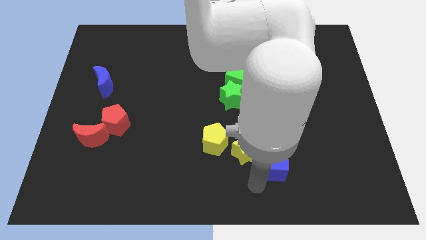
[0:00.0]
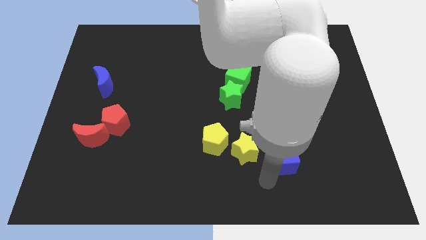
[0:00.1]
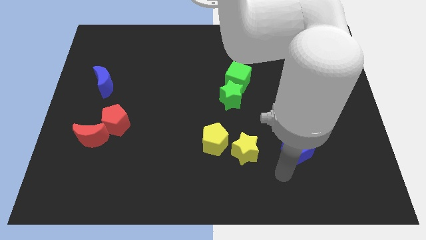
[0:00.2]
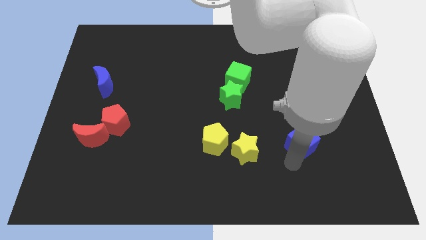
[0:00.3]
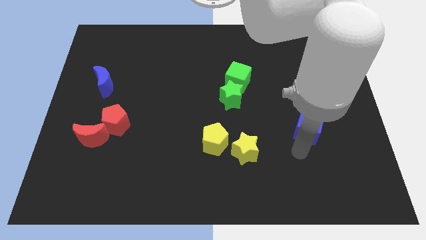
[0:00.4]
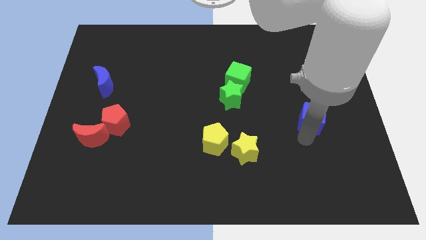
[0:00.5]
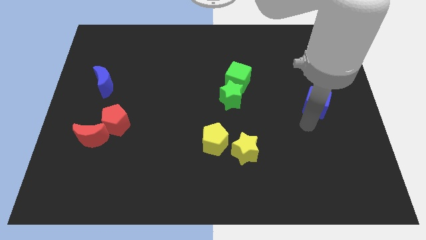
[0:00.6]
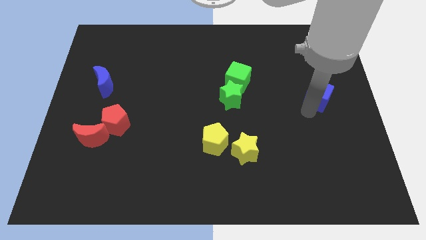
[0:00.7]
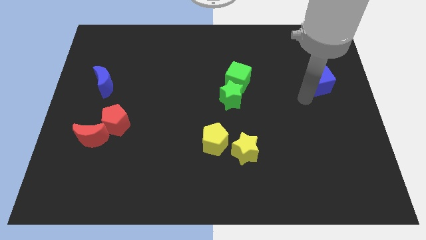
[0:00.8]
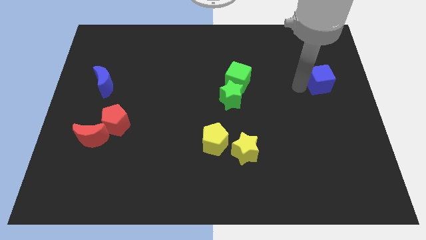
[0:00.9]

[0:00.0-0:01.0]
separate the blue cube from the yellow star

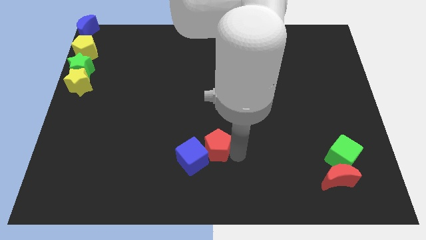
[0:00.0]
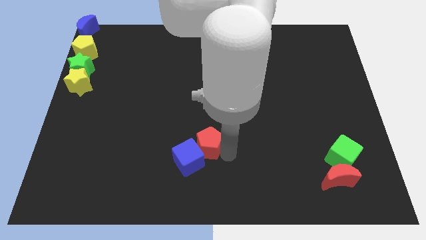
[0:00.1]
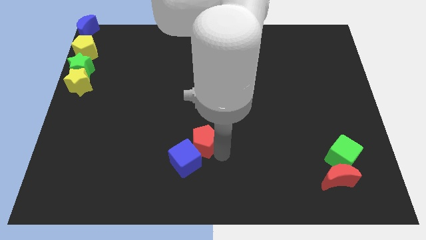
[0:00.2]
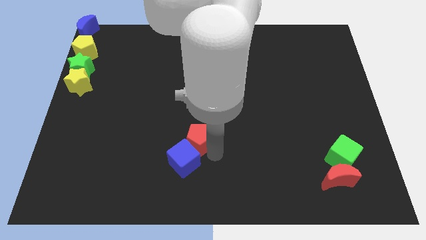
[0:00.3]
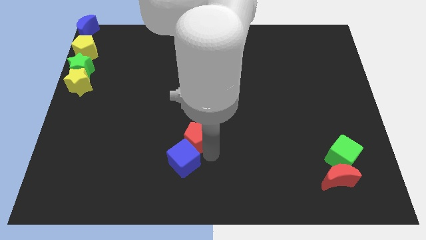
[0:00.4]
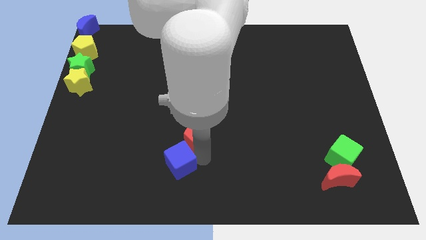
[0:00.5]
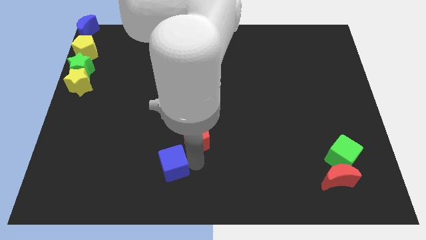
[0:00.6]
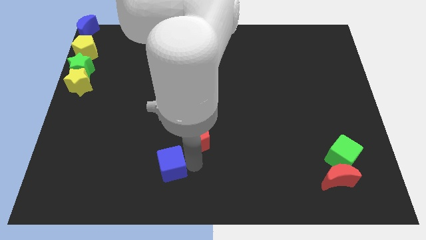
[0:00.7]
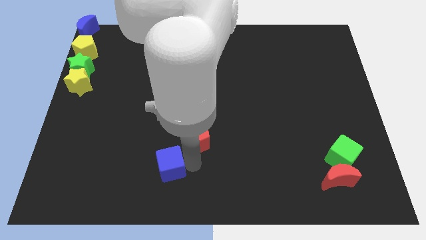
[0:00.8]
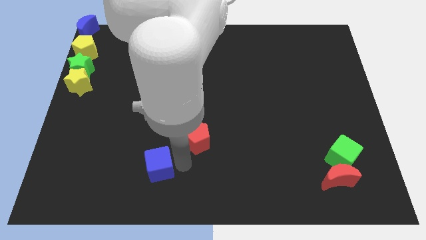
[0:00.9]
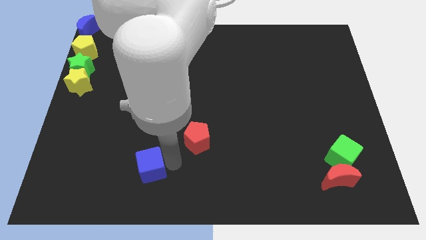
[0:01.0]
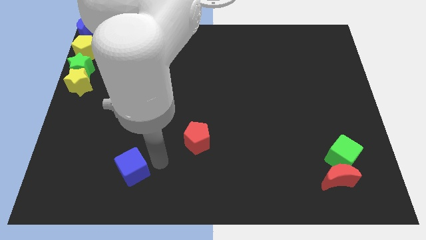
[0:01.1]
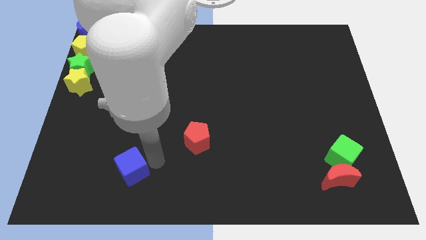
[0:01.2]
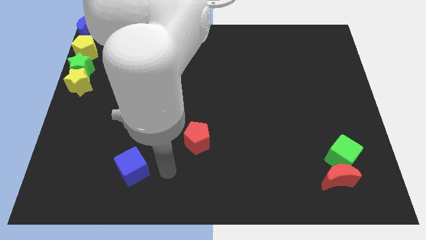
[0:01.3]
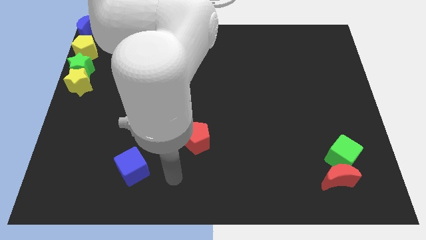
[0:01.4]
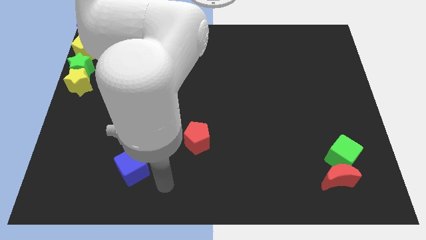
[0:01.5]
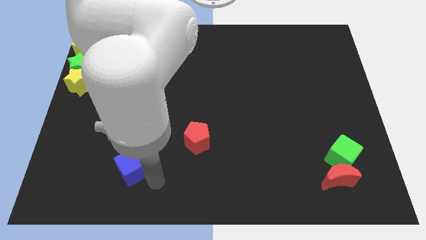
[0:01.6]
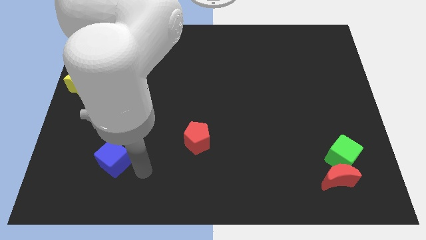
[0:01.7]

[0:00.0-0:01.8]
push the blue cube away from the red pentagon

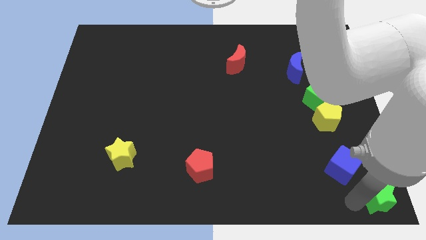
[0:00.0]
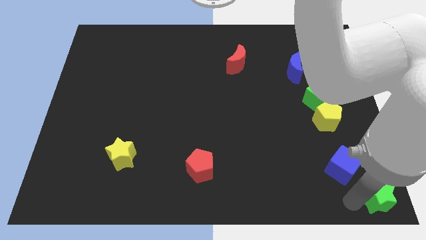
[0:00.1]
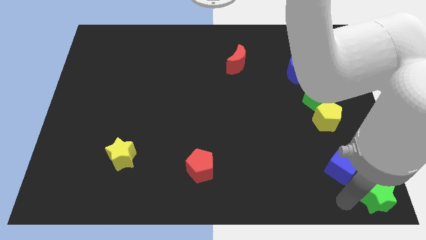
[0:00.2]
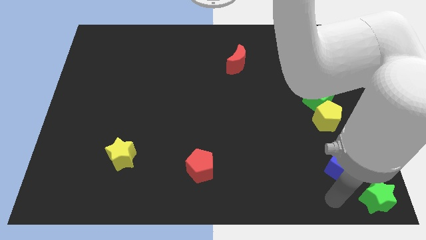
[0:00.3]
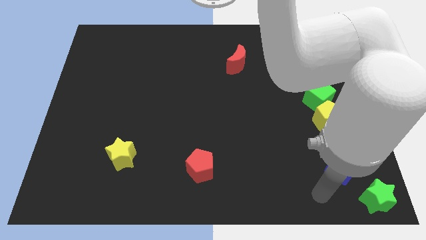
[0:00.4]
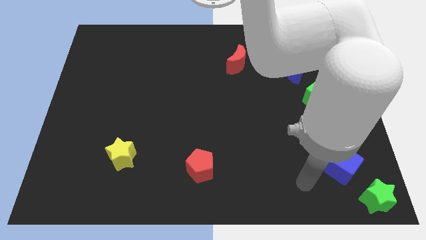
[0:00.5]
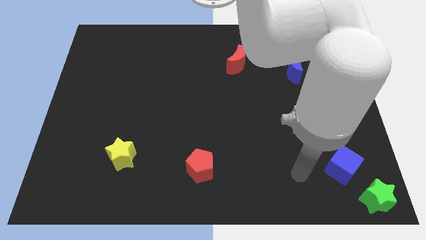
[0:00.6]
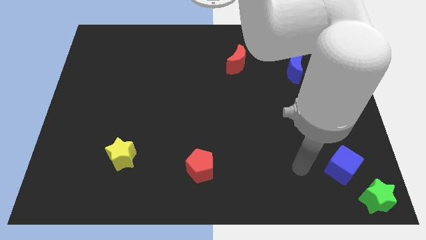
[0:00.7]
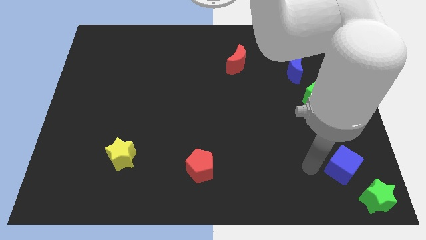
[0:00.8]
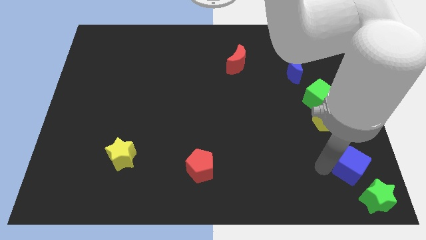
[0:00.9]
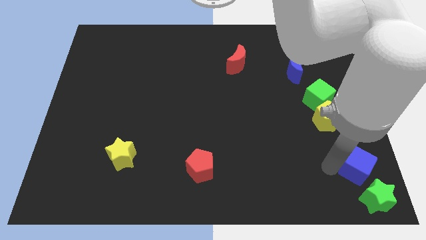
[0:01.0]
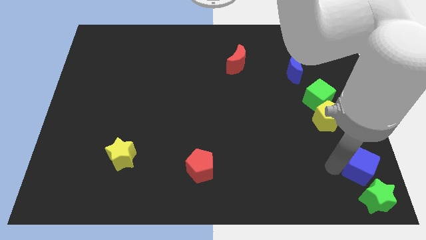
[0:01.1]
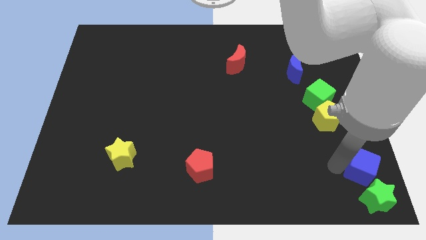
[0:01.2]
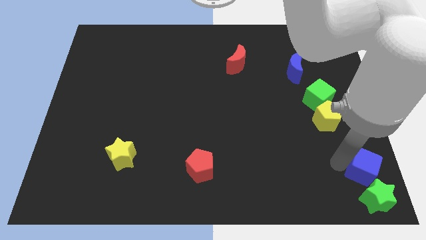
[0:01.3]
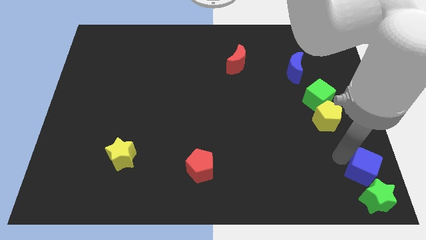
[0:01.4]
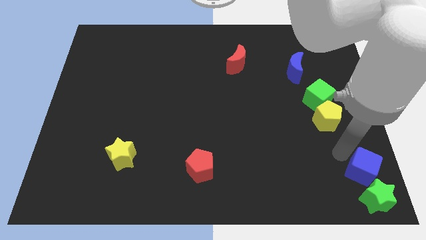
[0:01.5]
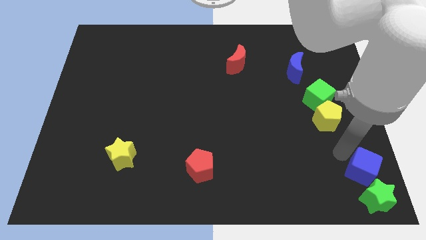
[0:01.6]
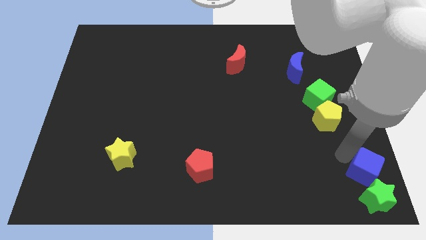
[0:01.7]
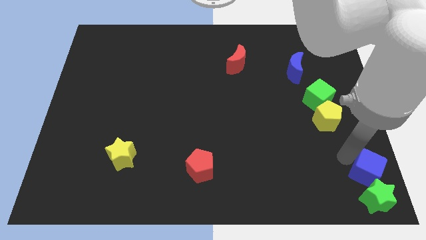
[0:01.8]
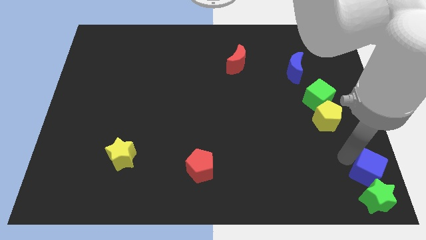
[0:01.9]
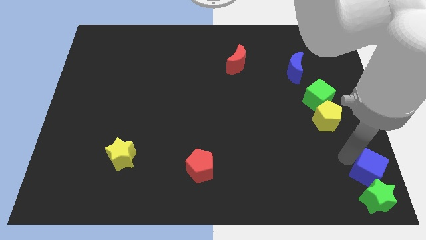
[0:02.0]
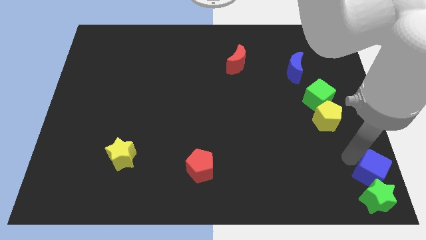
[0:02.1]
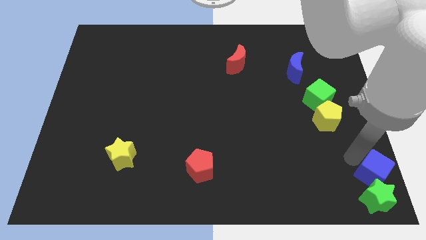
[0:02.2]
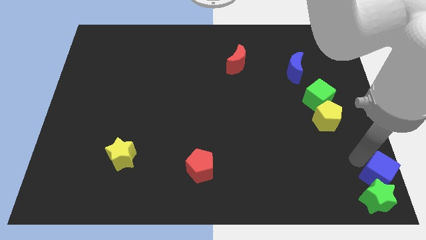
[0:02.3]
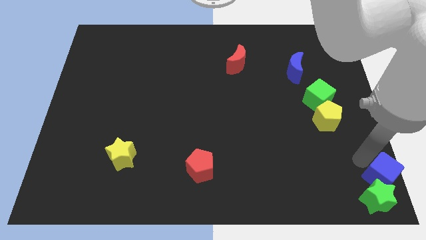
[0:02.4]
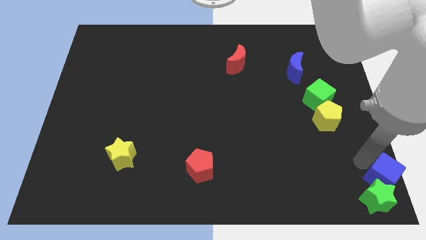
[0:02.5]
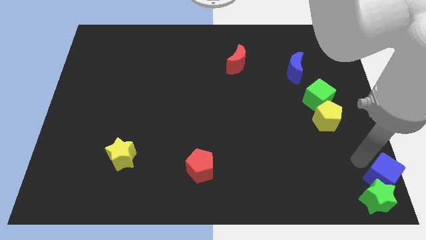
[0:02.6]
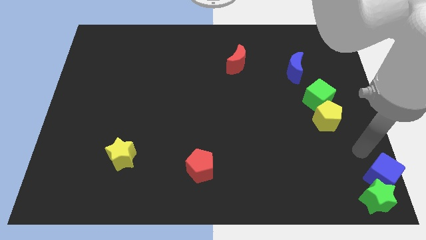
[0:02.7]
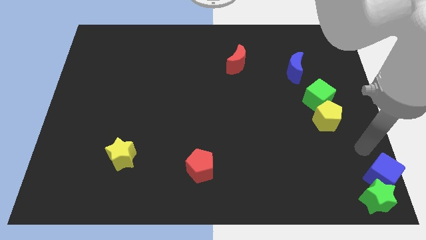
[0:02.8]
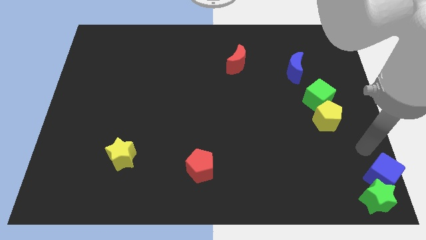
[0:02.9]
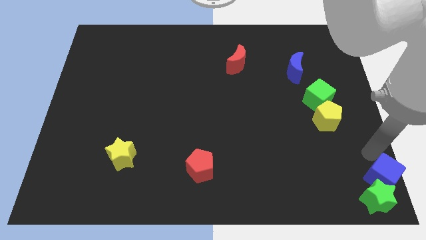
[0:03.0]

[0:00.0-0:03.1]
move the blue cube on top right to the green star

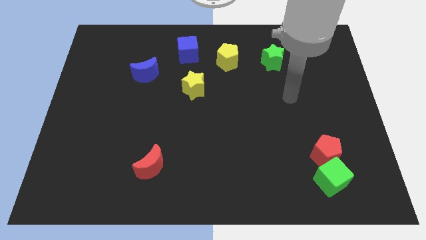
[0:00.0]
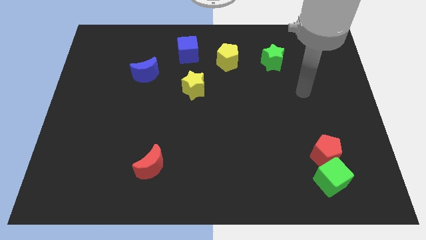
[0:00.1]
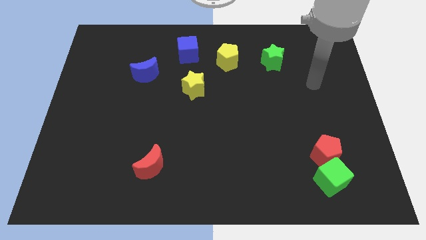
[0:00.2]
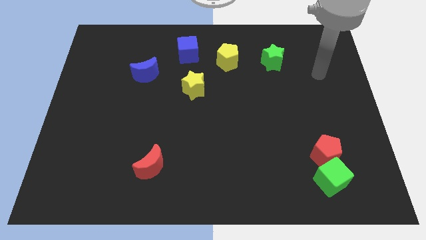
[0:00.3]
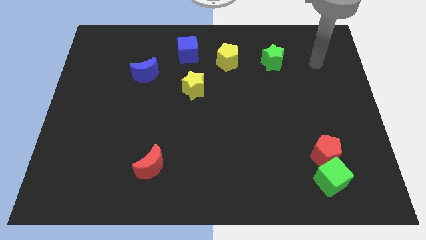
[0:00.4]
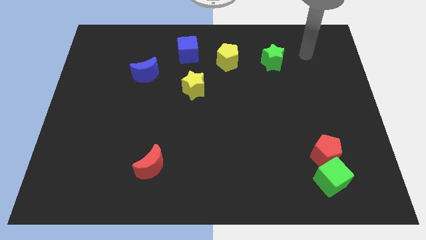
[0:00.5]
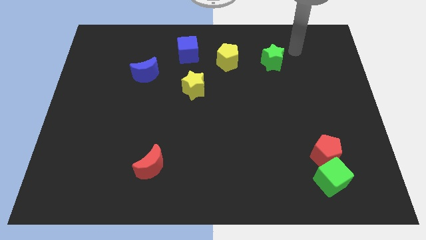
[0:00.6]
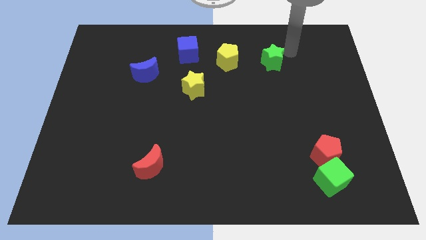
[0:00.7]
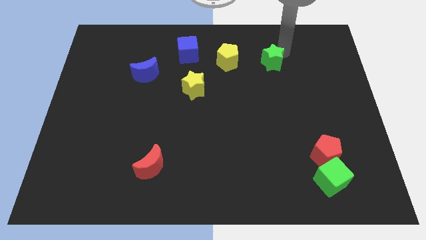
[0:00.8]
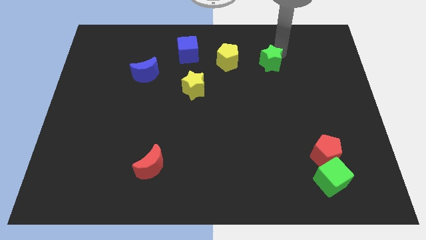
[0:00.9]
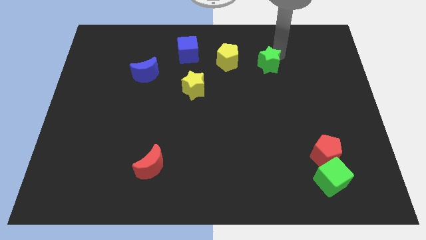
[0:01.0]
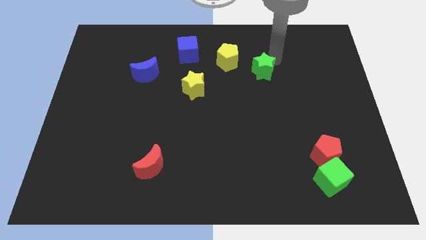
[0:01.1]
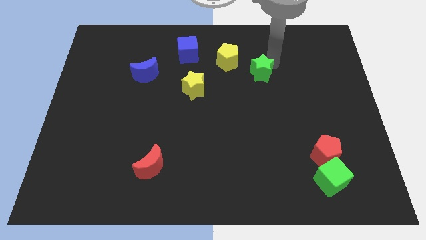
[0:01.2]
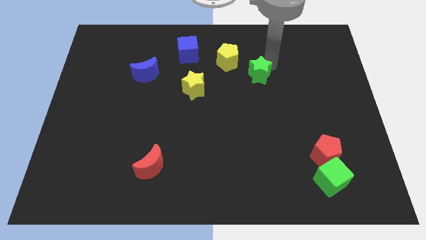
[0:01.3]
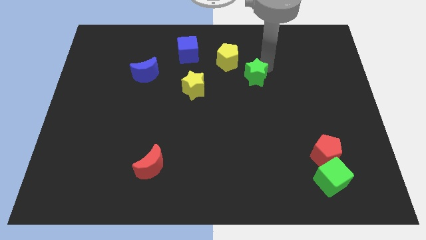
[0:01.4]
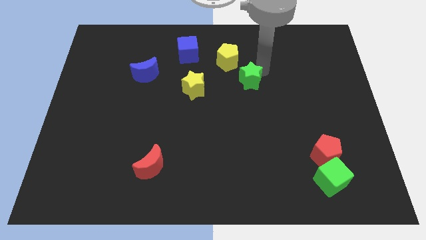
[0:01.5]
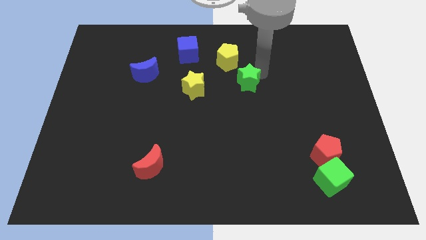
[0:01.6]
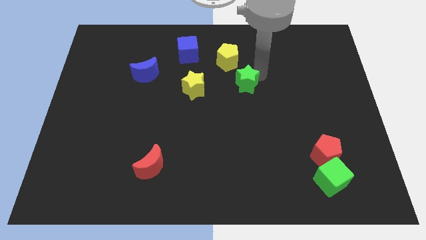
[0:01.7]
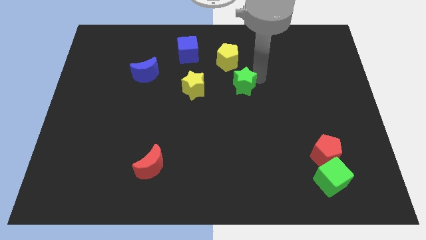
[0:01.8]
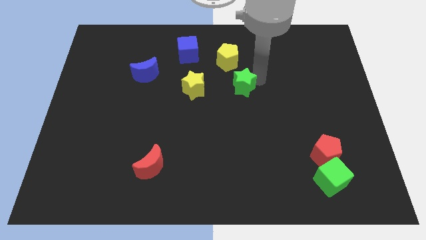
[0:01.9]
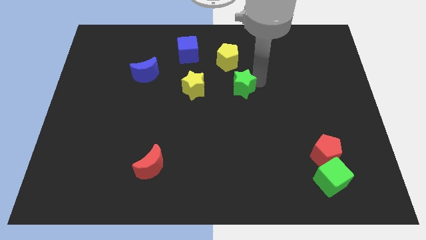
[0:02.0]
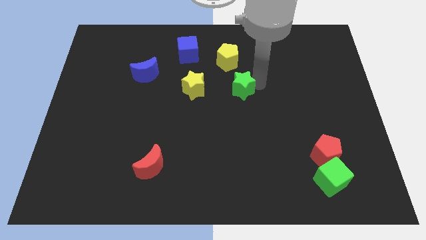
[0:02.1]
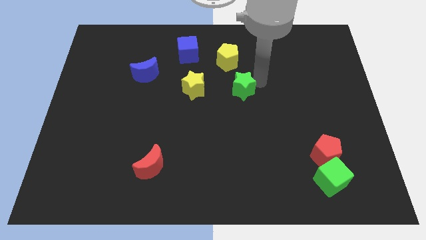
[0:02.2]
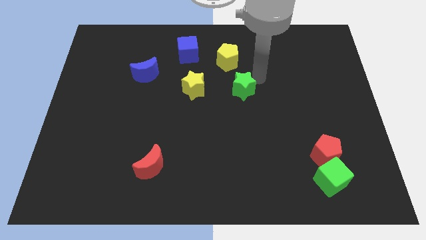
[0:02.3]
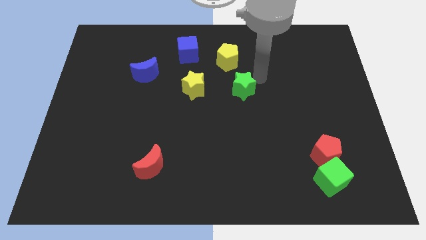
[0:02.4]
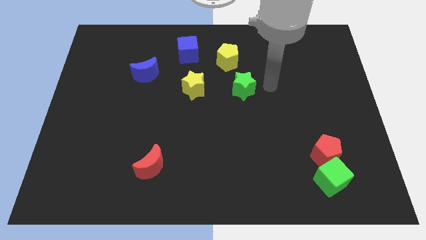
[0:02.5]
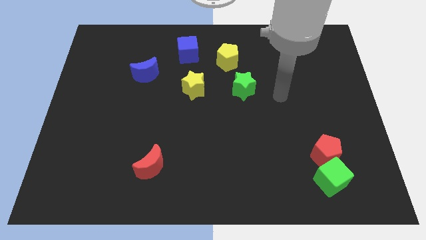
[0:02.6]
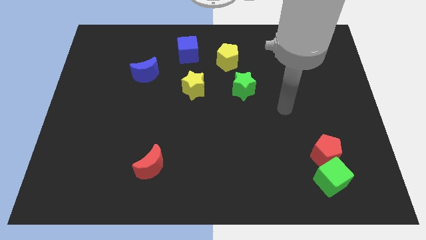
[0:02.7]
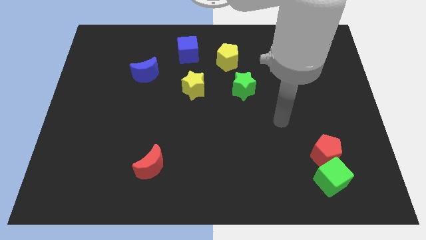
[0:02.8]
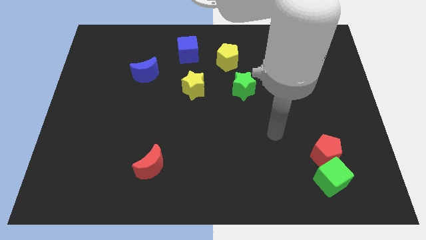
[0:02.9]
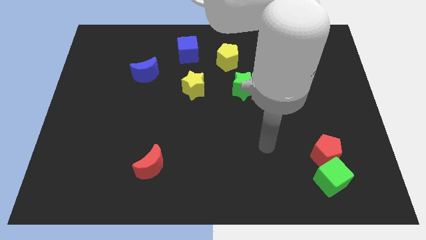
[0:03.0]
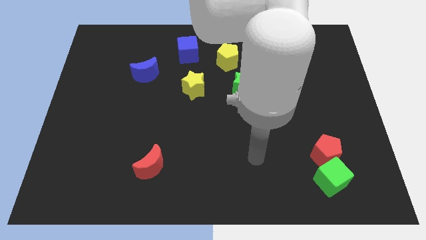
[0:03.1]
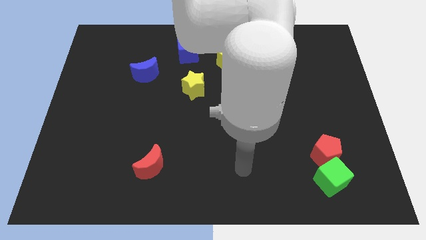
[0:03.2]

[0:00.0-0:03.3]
move green star towards yellow star
